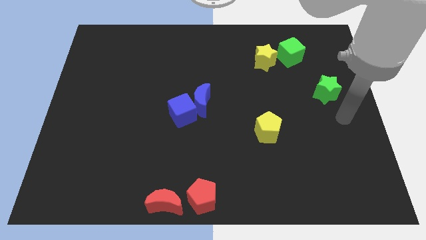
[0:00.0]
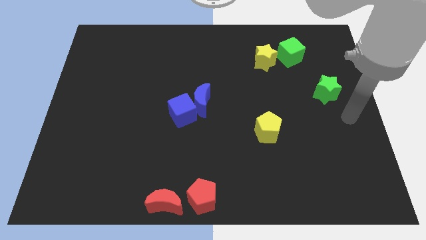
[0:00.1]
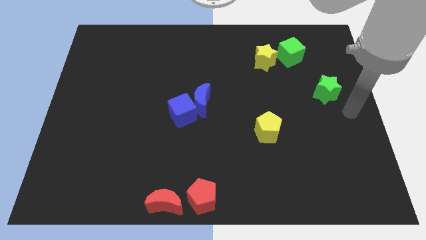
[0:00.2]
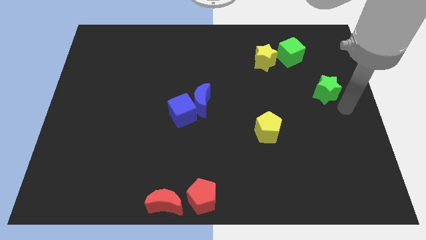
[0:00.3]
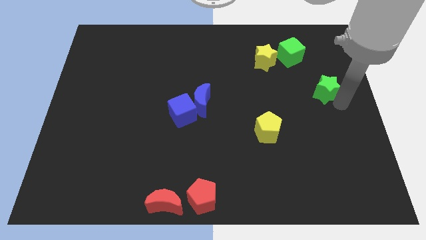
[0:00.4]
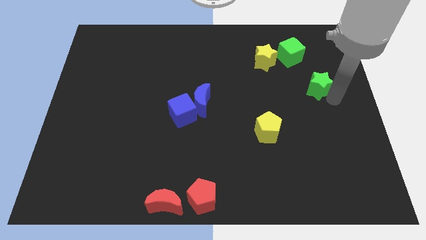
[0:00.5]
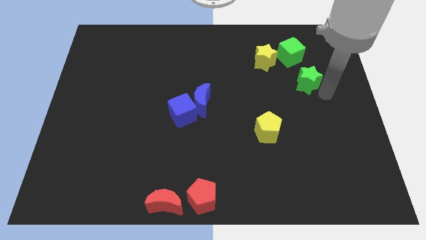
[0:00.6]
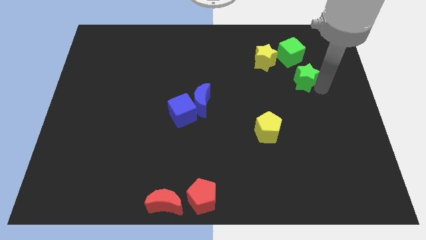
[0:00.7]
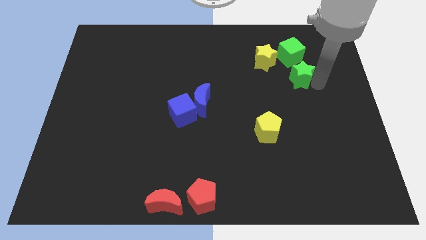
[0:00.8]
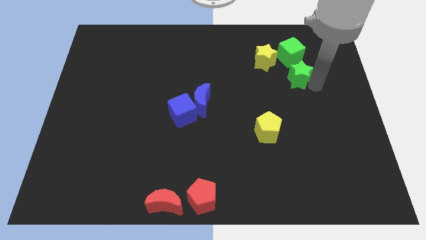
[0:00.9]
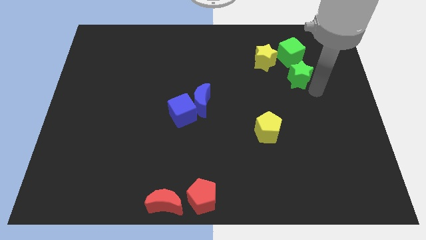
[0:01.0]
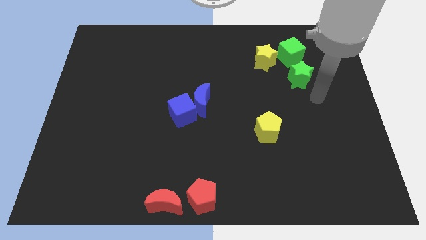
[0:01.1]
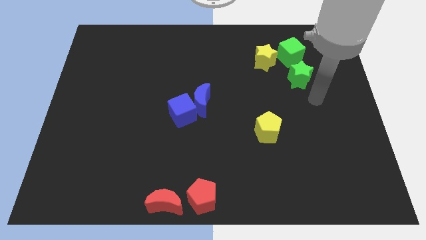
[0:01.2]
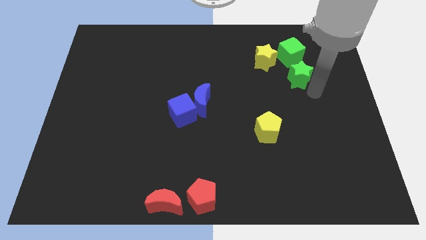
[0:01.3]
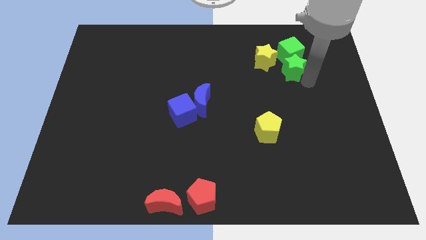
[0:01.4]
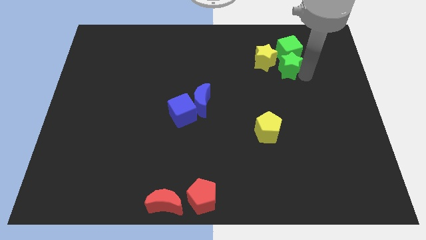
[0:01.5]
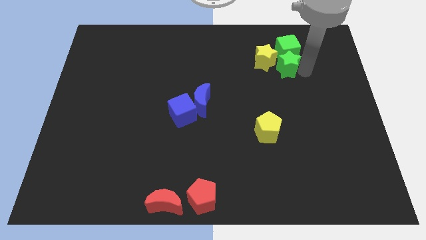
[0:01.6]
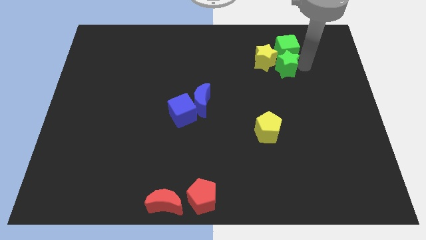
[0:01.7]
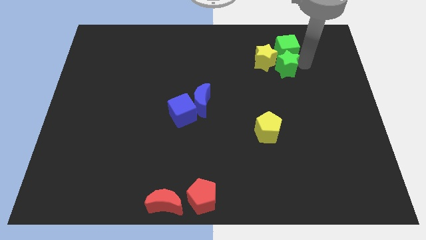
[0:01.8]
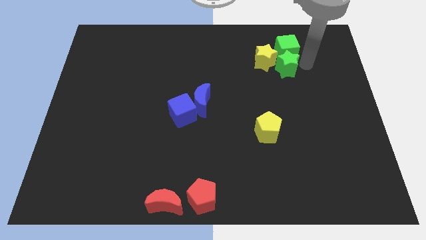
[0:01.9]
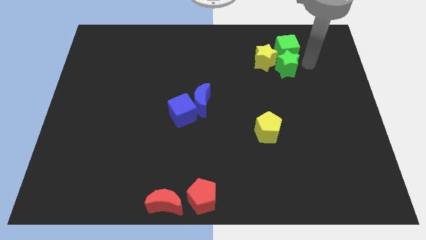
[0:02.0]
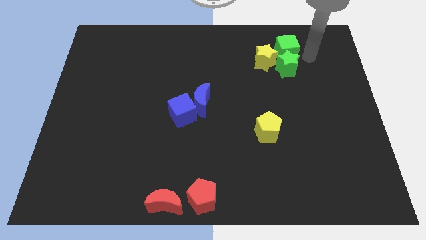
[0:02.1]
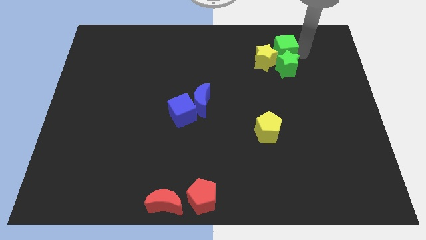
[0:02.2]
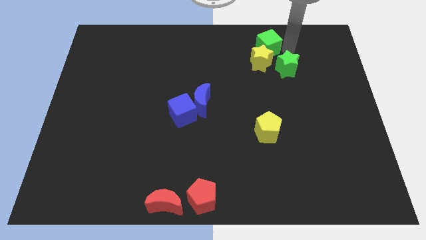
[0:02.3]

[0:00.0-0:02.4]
move green star below to the green cube

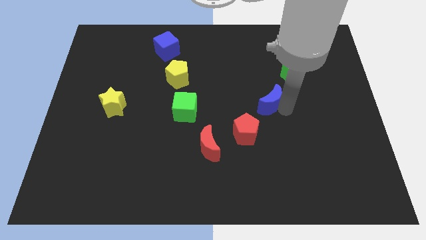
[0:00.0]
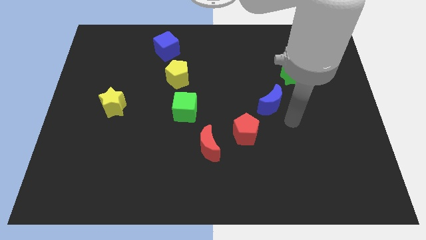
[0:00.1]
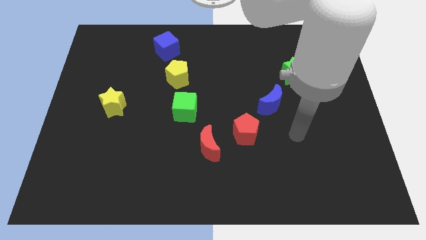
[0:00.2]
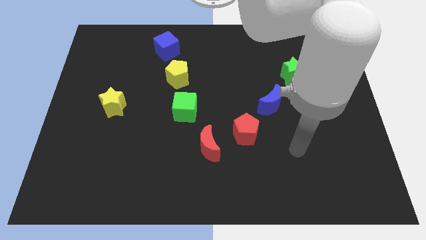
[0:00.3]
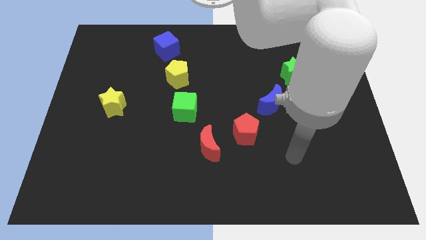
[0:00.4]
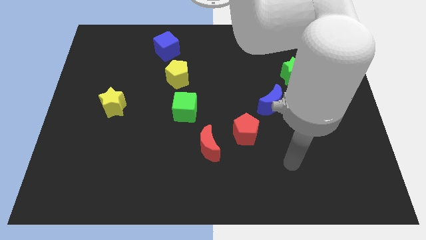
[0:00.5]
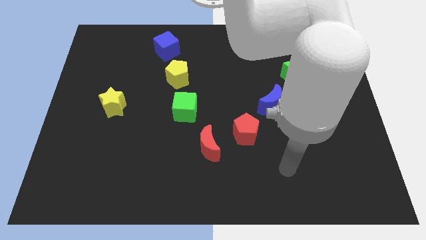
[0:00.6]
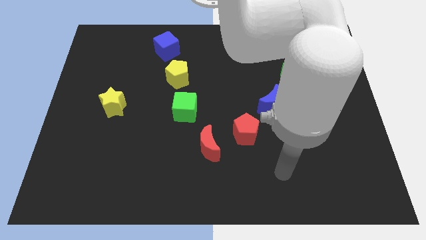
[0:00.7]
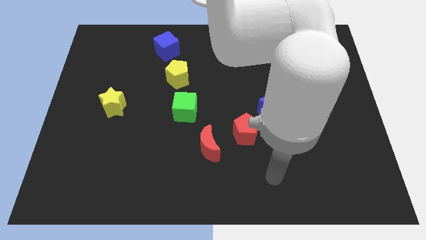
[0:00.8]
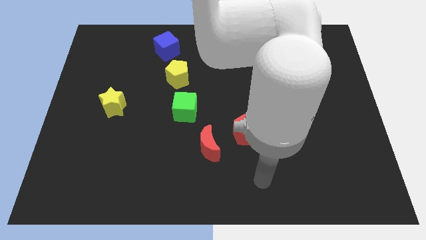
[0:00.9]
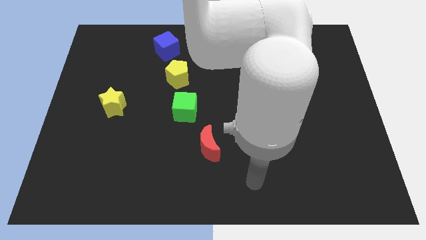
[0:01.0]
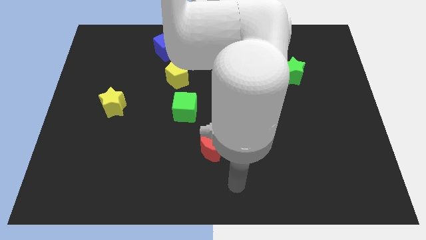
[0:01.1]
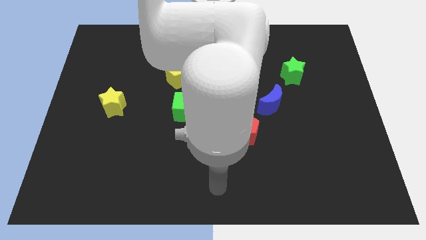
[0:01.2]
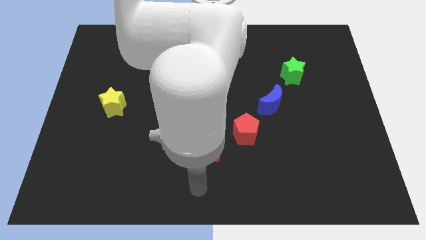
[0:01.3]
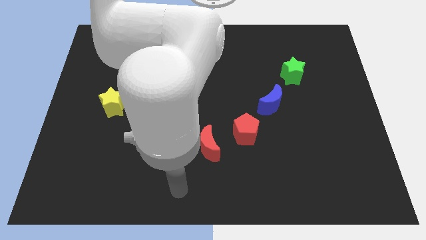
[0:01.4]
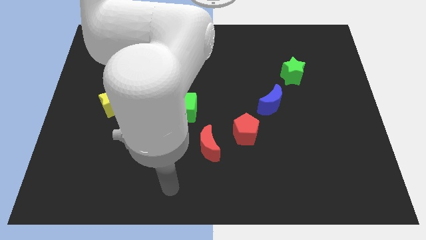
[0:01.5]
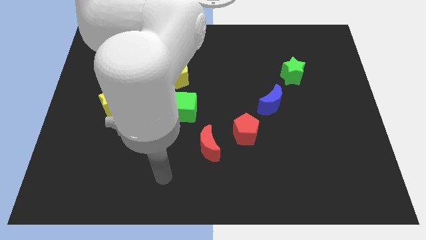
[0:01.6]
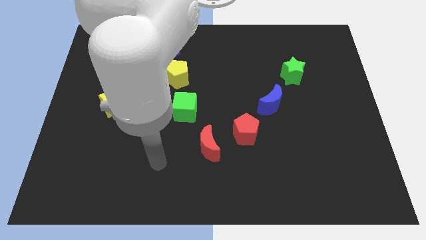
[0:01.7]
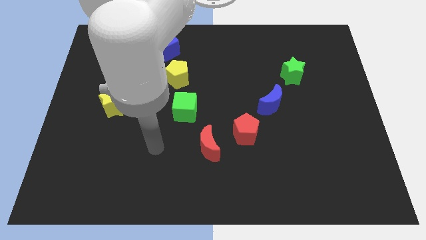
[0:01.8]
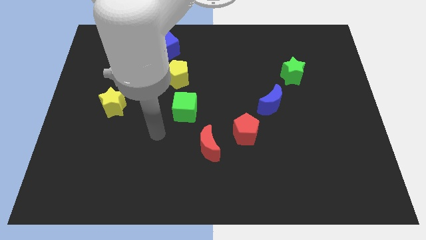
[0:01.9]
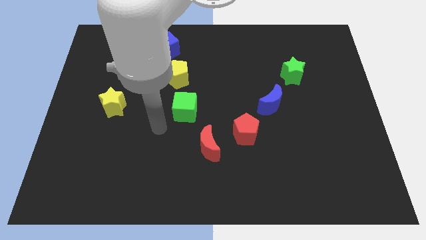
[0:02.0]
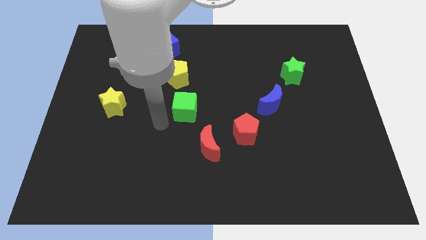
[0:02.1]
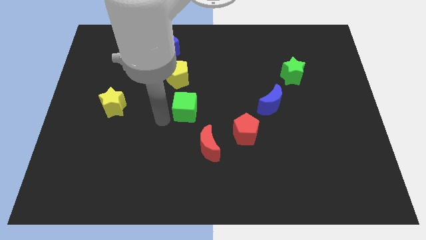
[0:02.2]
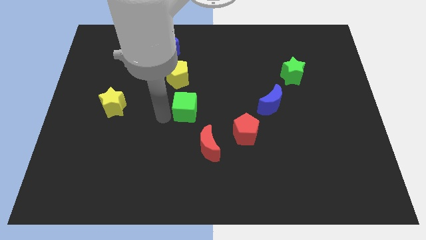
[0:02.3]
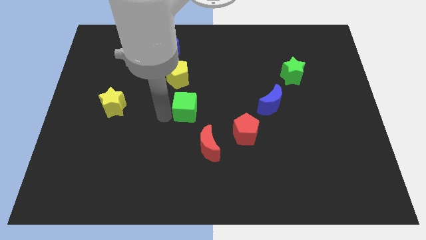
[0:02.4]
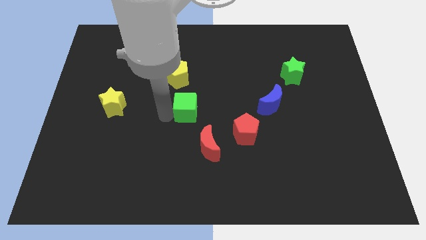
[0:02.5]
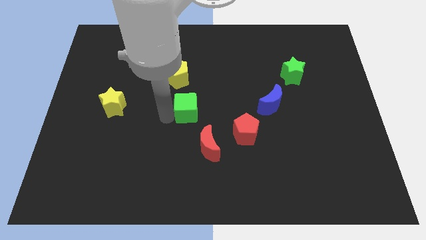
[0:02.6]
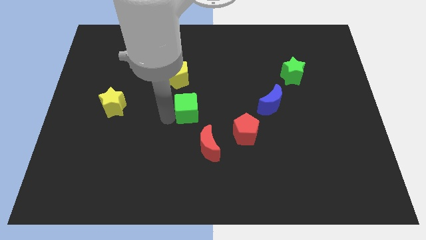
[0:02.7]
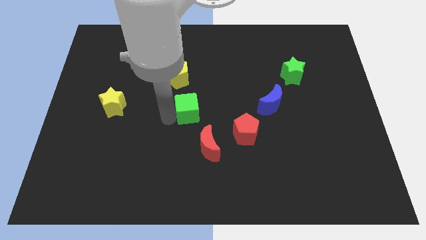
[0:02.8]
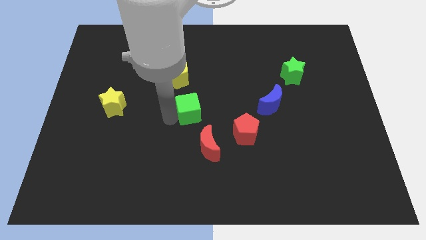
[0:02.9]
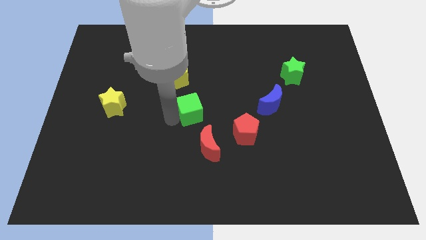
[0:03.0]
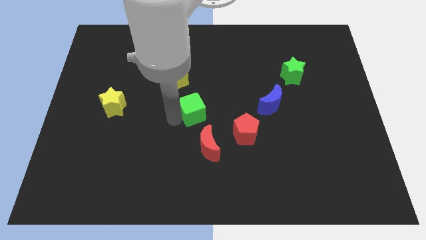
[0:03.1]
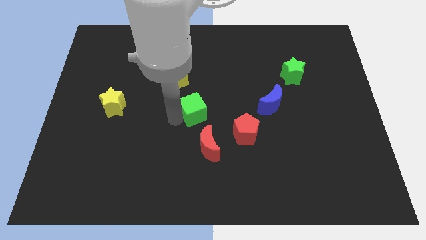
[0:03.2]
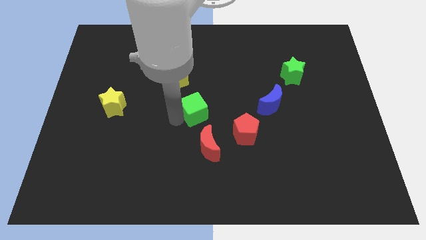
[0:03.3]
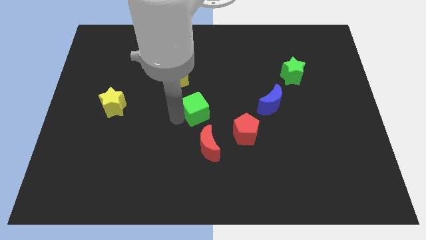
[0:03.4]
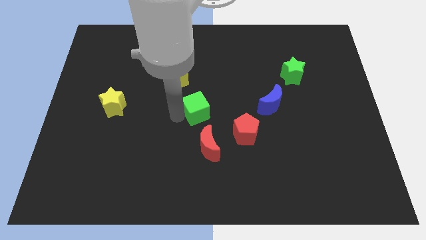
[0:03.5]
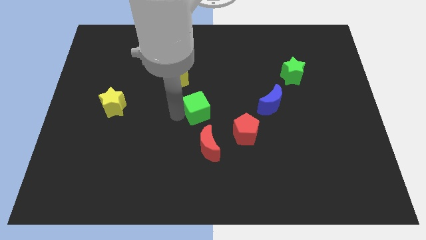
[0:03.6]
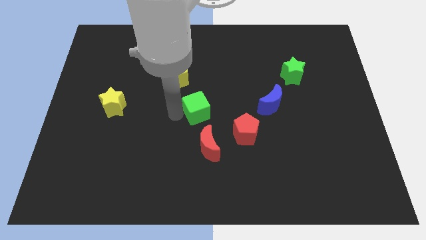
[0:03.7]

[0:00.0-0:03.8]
put the green cube in between the red crescent and yellow pentagon

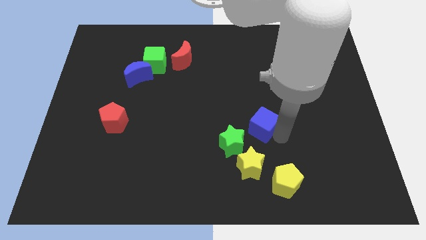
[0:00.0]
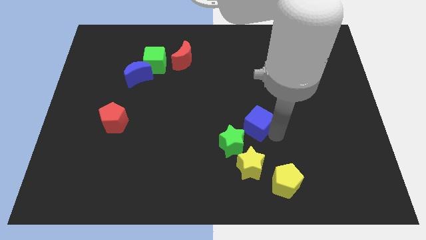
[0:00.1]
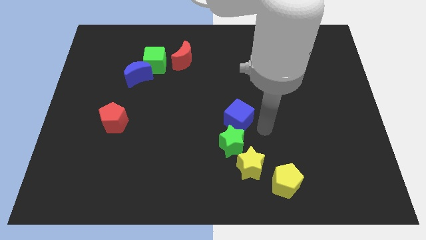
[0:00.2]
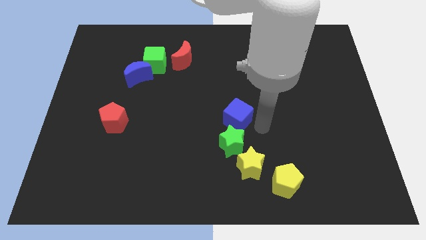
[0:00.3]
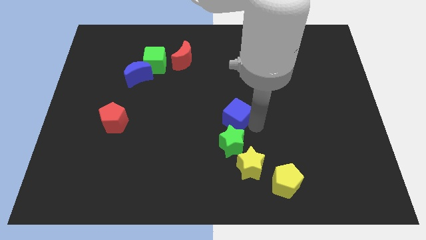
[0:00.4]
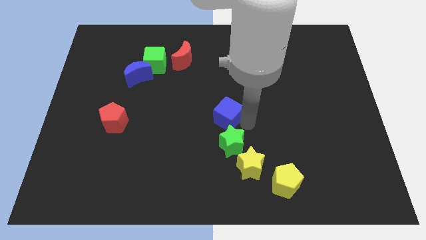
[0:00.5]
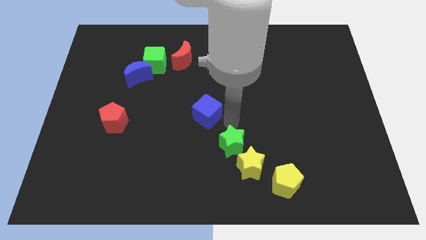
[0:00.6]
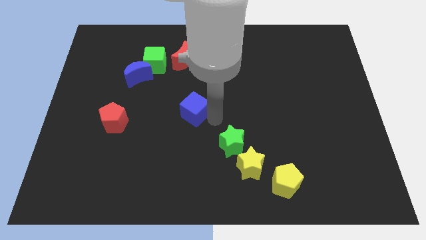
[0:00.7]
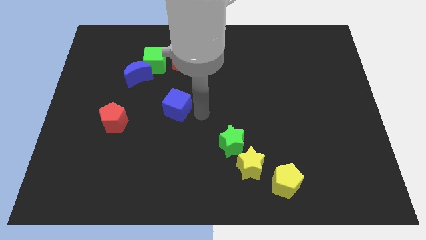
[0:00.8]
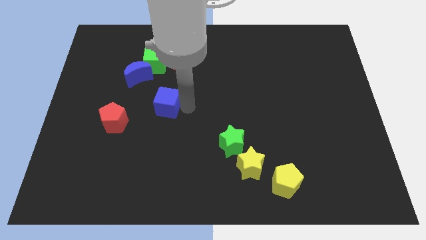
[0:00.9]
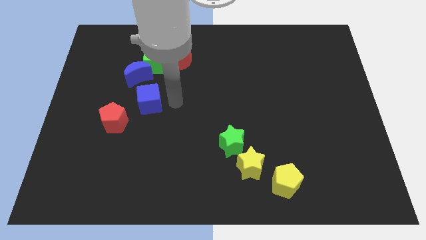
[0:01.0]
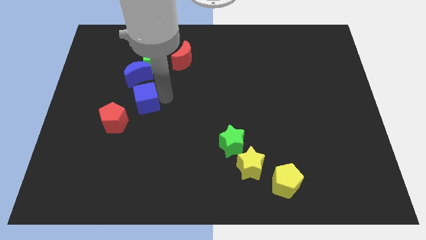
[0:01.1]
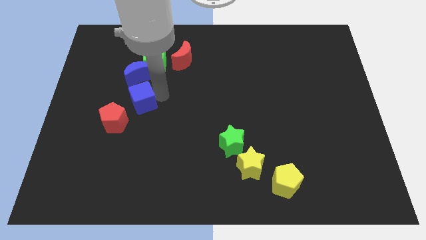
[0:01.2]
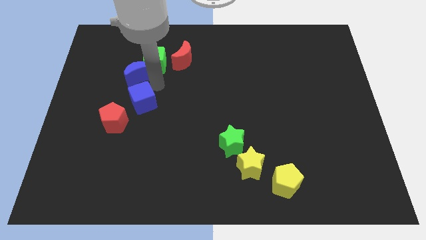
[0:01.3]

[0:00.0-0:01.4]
put the blue cube underneath the blue crescent

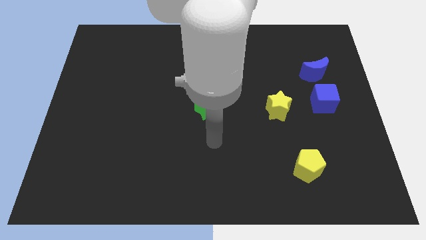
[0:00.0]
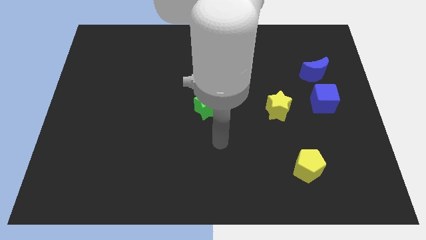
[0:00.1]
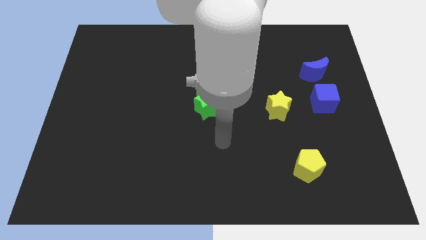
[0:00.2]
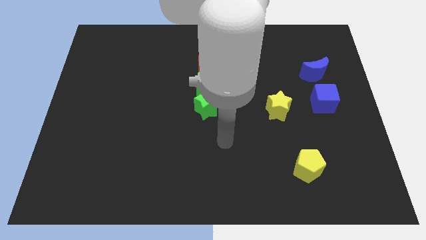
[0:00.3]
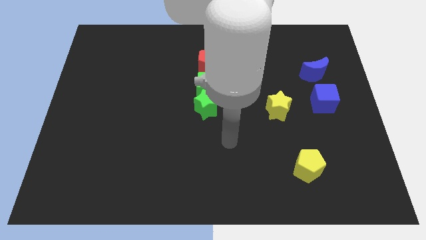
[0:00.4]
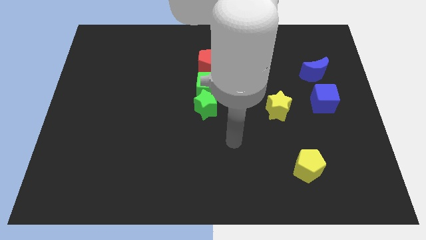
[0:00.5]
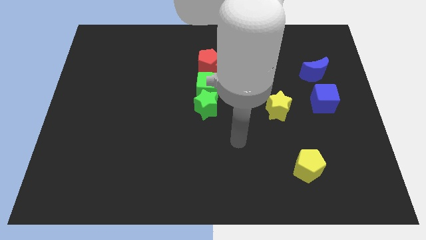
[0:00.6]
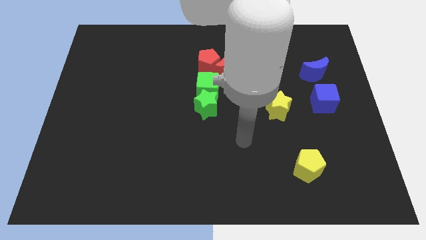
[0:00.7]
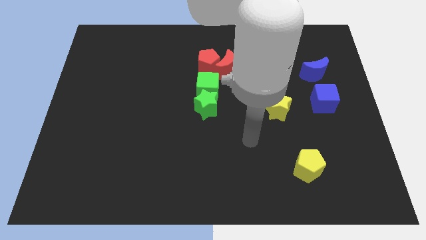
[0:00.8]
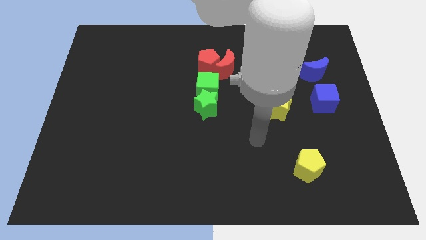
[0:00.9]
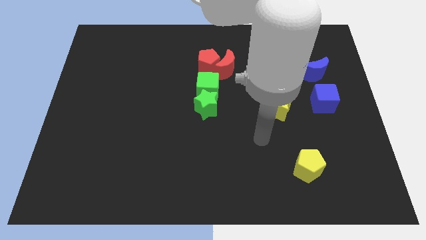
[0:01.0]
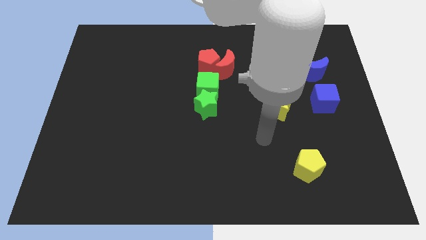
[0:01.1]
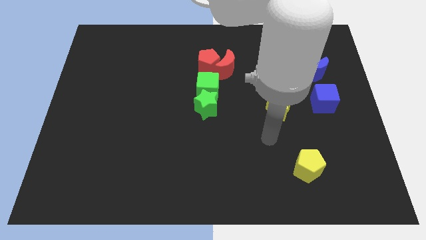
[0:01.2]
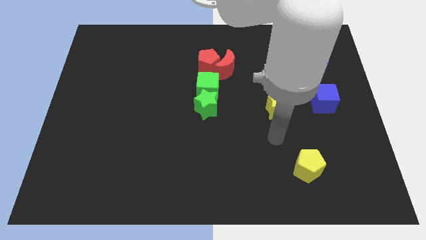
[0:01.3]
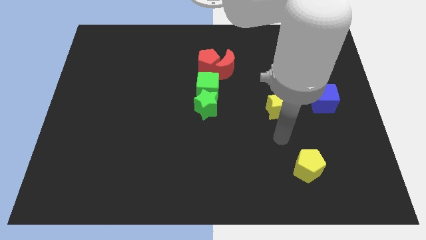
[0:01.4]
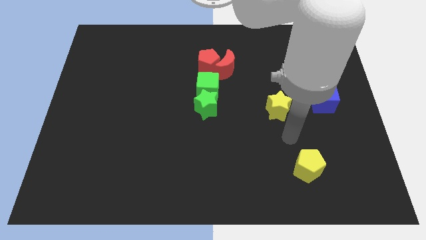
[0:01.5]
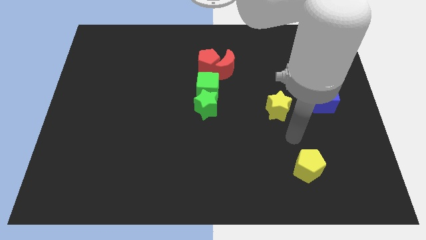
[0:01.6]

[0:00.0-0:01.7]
put your hand between the yellow blocks
